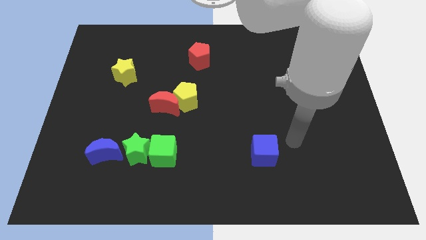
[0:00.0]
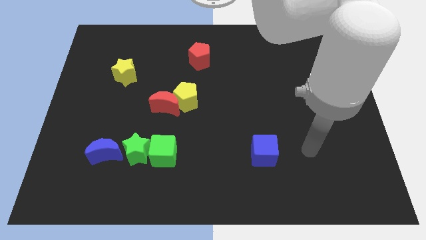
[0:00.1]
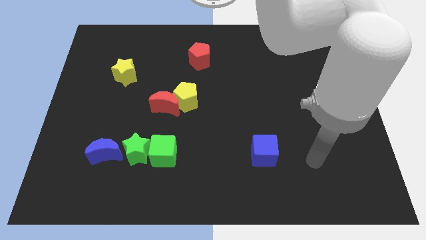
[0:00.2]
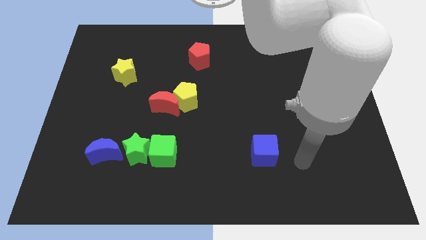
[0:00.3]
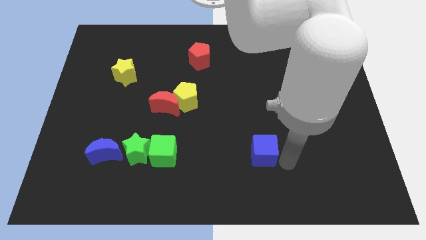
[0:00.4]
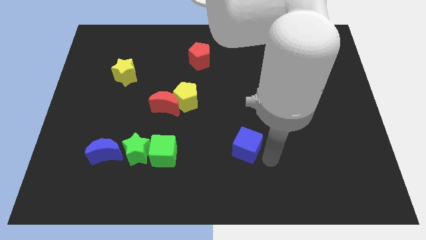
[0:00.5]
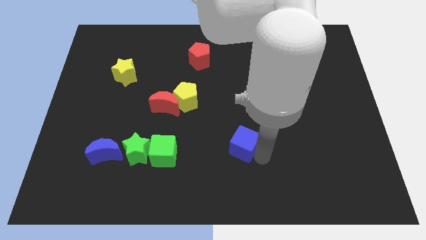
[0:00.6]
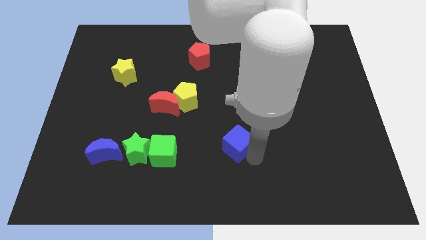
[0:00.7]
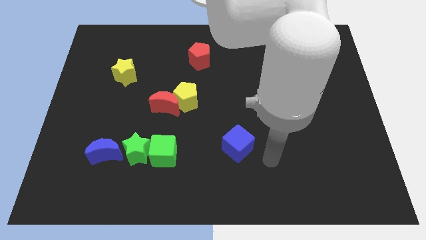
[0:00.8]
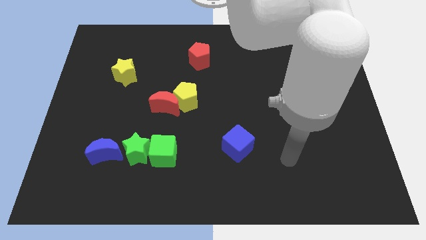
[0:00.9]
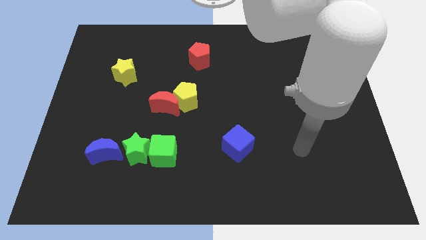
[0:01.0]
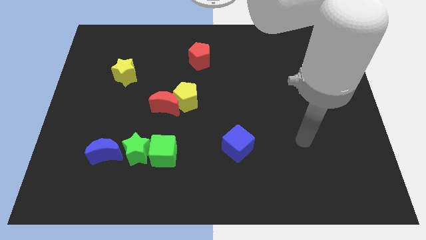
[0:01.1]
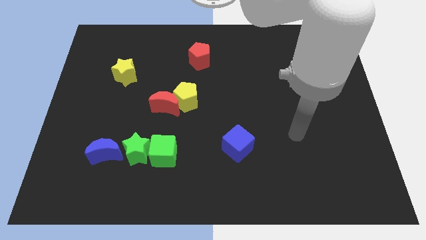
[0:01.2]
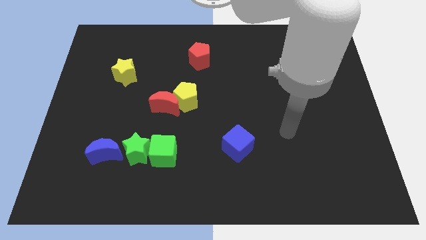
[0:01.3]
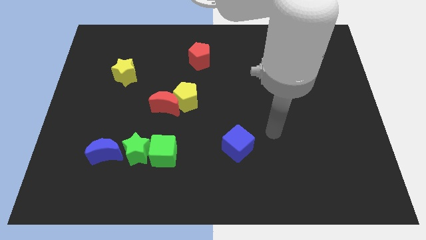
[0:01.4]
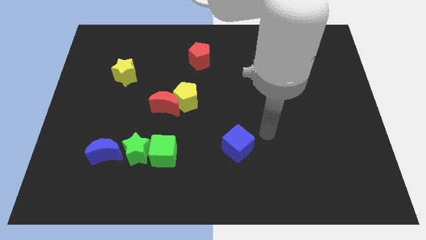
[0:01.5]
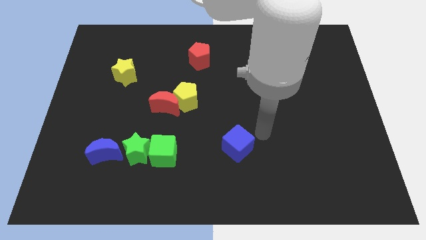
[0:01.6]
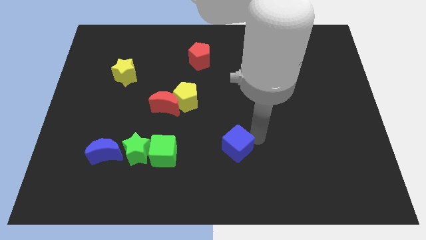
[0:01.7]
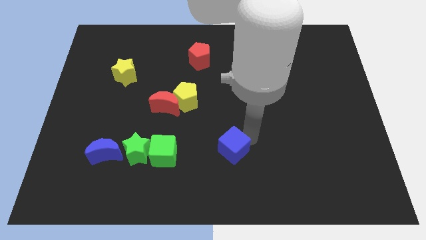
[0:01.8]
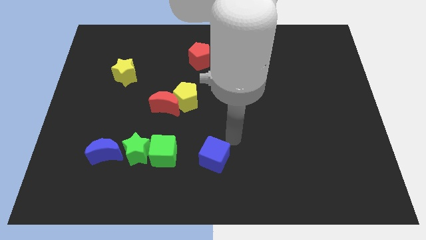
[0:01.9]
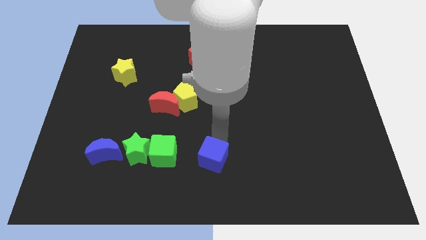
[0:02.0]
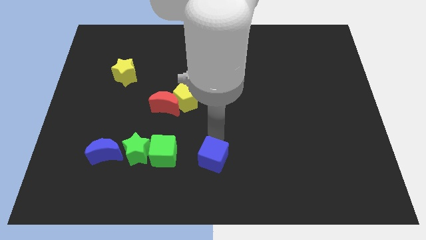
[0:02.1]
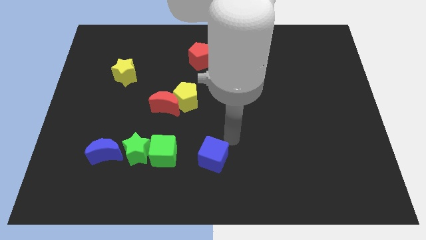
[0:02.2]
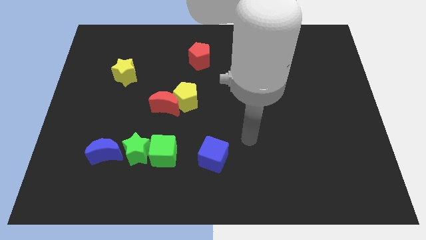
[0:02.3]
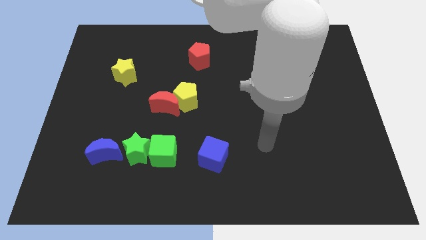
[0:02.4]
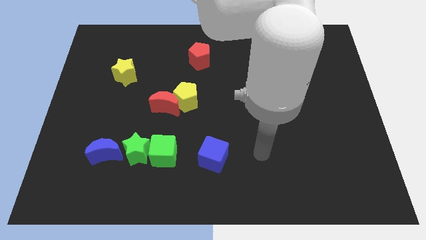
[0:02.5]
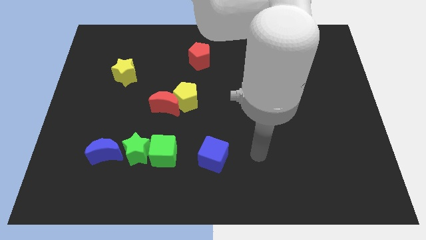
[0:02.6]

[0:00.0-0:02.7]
place the blue cube parallel to the green cube

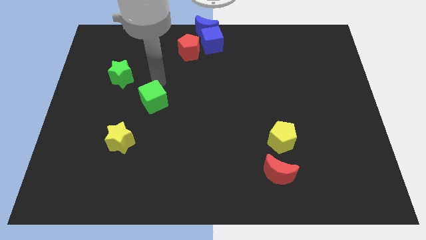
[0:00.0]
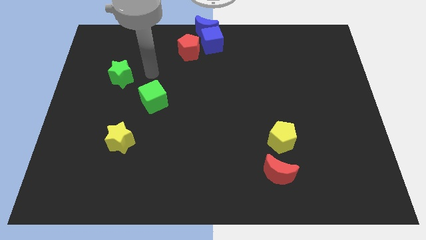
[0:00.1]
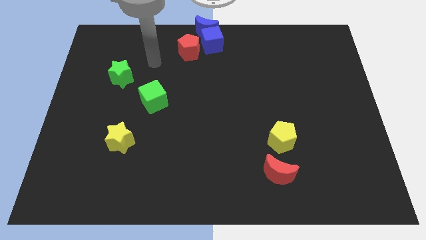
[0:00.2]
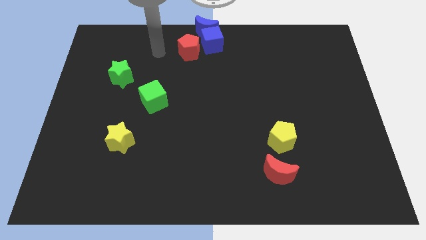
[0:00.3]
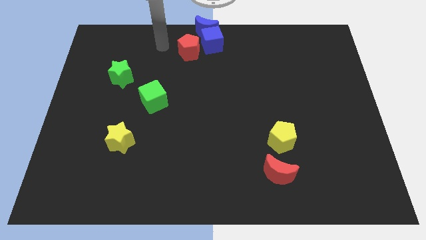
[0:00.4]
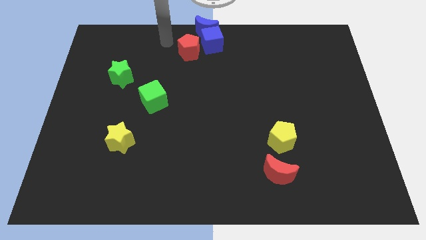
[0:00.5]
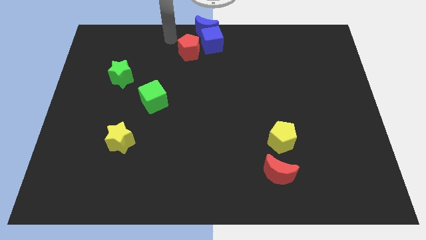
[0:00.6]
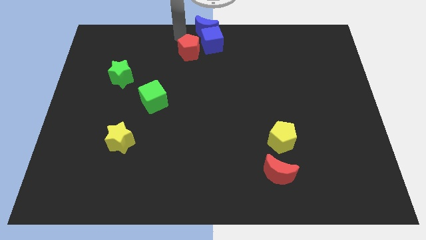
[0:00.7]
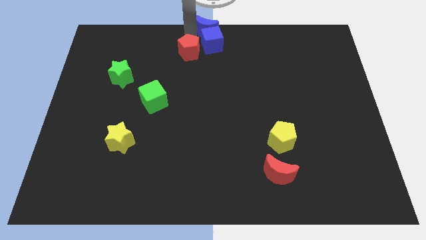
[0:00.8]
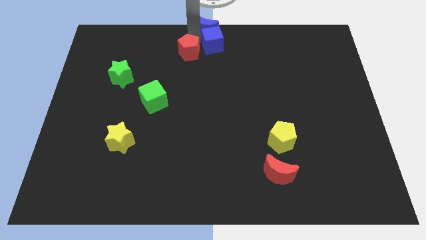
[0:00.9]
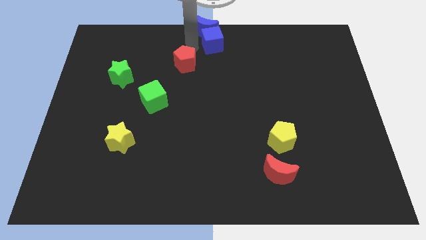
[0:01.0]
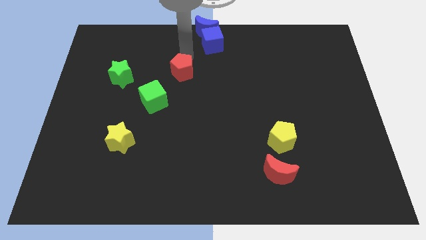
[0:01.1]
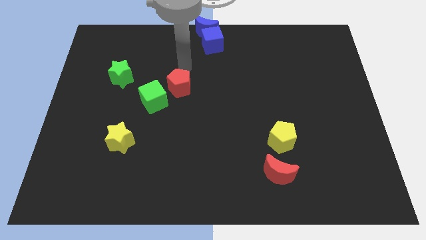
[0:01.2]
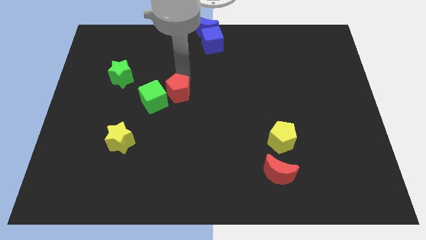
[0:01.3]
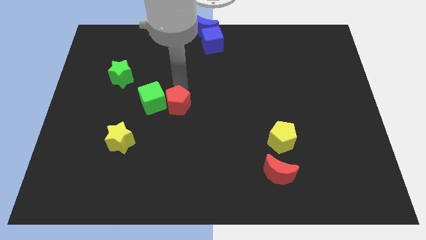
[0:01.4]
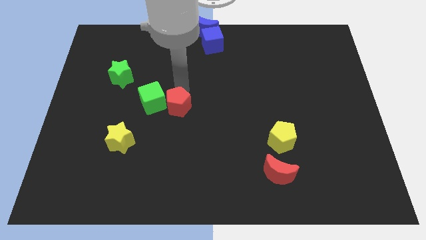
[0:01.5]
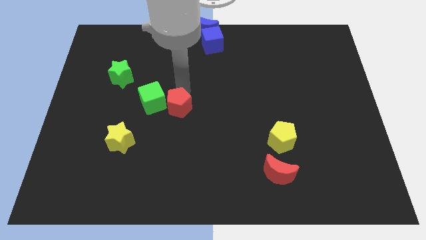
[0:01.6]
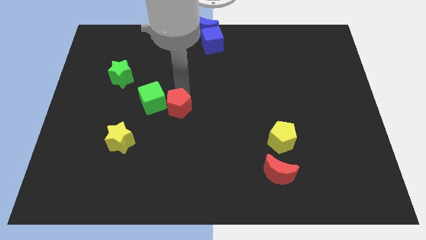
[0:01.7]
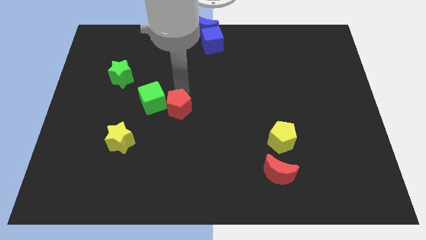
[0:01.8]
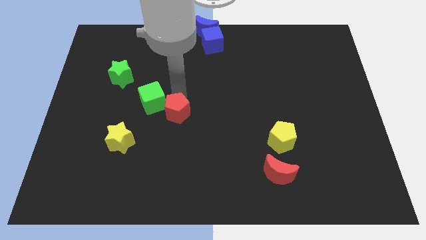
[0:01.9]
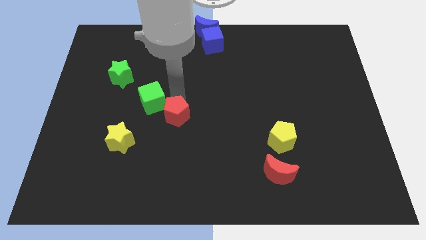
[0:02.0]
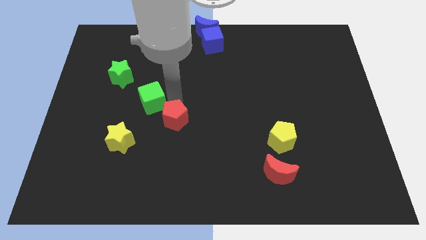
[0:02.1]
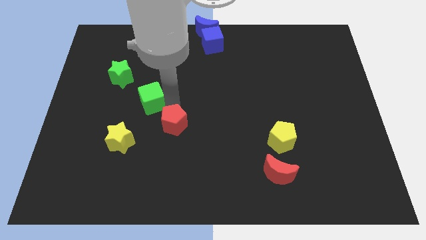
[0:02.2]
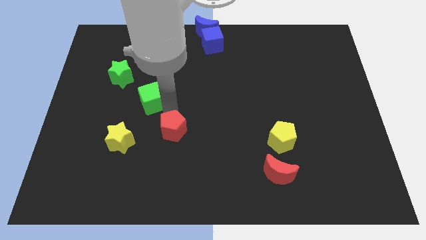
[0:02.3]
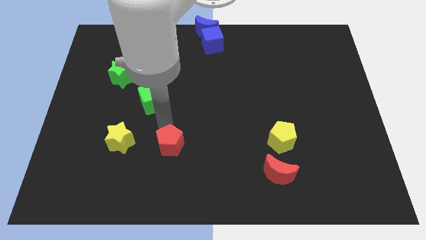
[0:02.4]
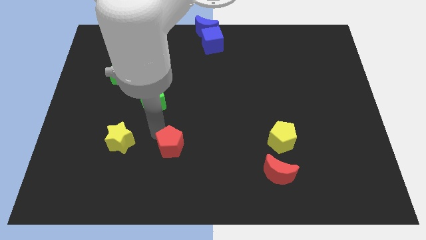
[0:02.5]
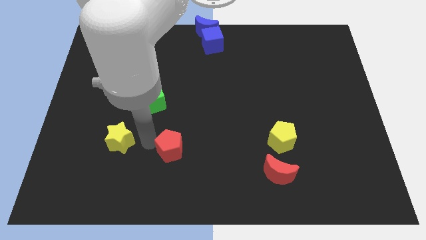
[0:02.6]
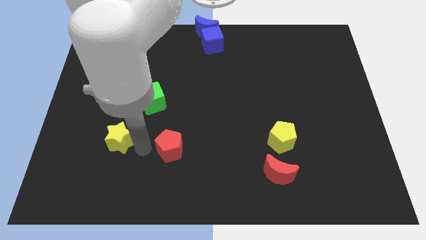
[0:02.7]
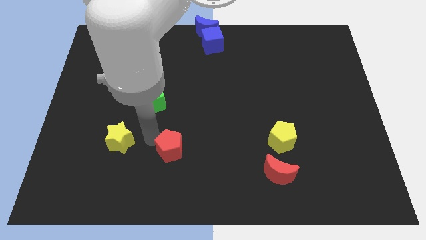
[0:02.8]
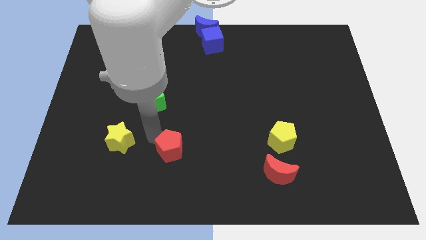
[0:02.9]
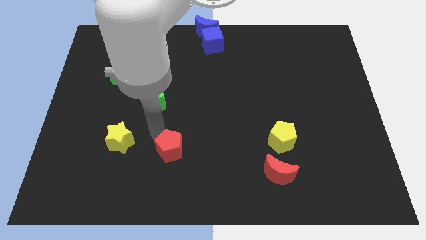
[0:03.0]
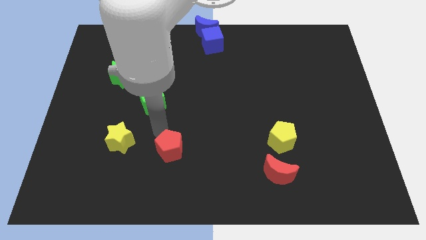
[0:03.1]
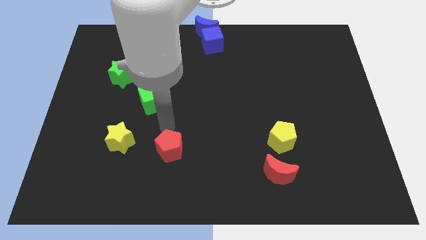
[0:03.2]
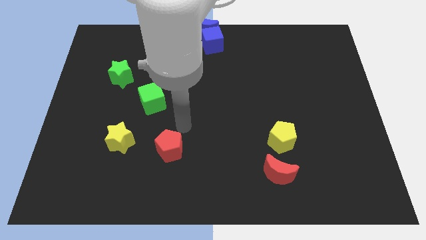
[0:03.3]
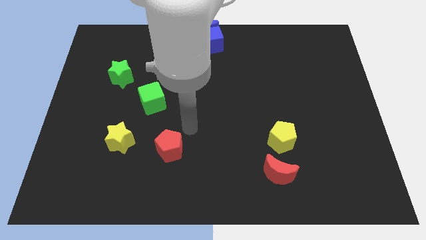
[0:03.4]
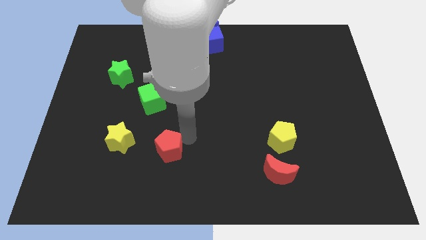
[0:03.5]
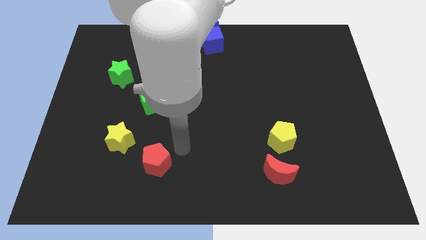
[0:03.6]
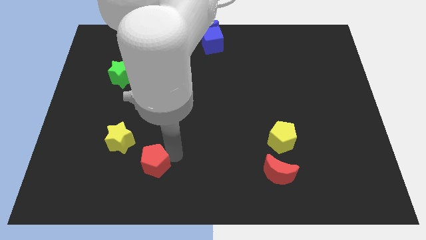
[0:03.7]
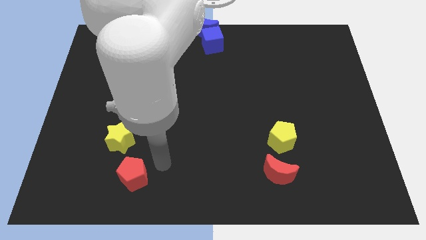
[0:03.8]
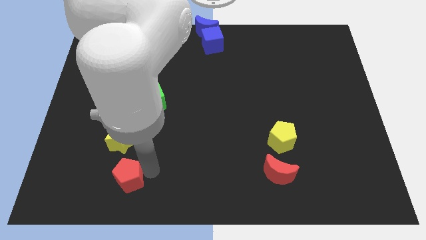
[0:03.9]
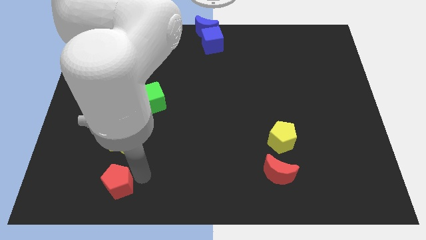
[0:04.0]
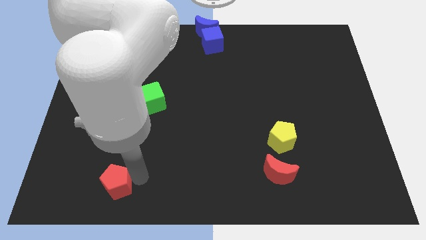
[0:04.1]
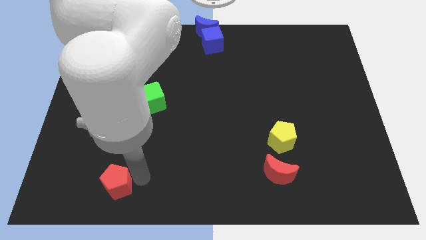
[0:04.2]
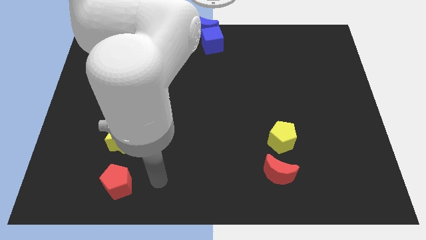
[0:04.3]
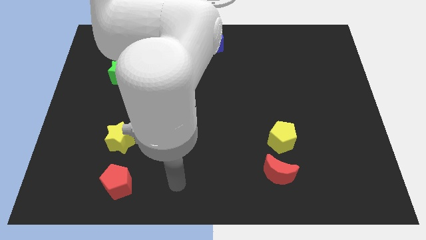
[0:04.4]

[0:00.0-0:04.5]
place the red pentagon down to the yellow star

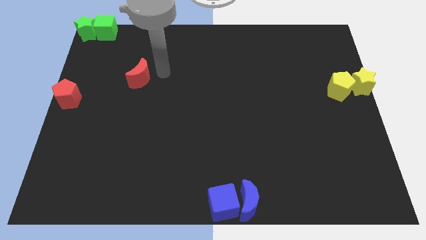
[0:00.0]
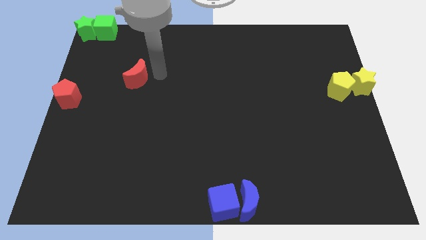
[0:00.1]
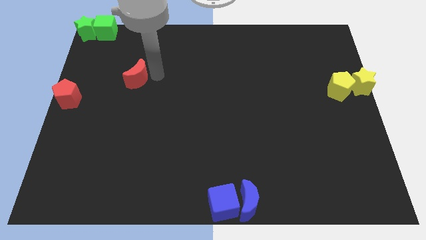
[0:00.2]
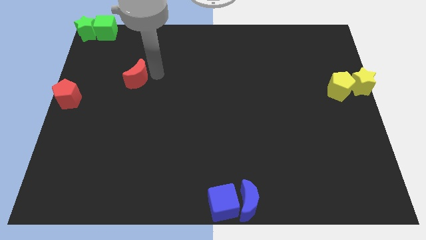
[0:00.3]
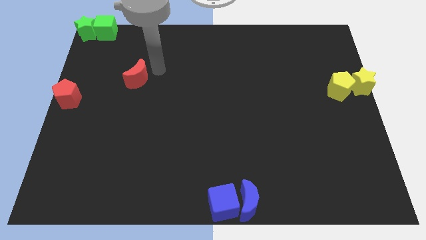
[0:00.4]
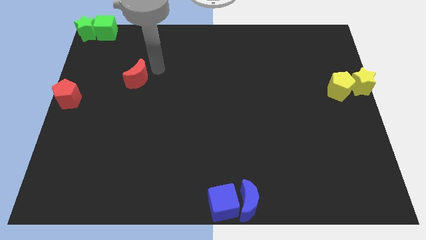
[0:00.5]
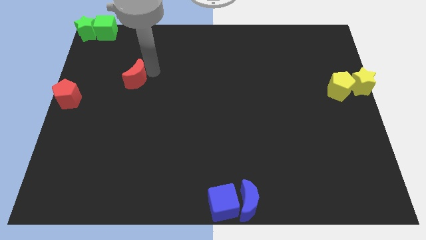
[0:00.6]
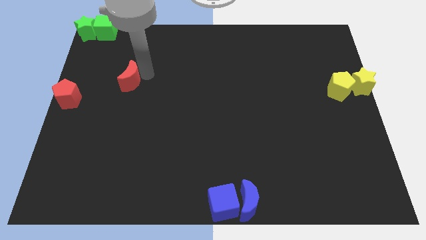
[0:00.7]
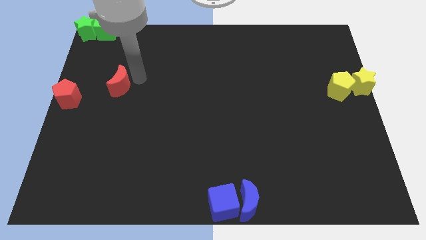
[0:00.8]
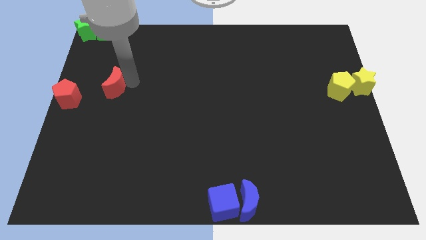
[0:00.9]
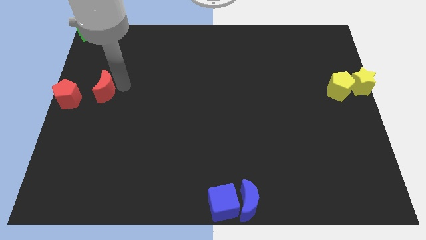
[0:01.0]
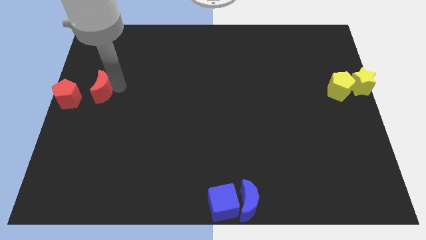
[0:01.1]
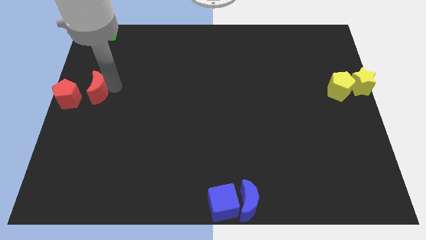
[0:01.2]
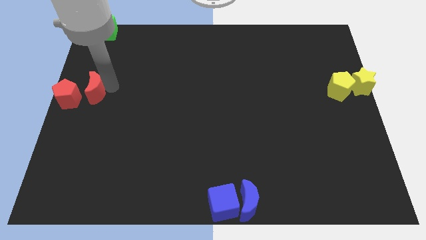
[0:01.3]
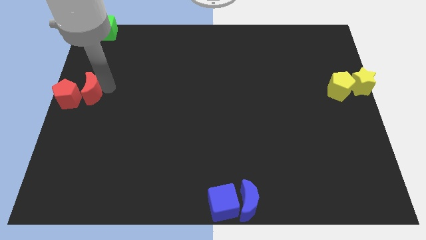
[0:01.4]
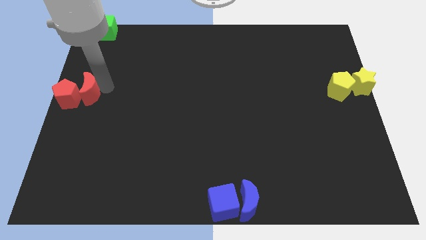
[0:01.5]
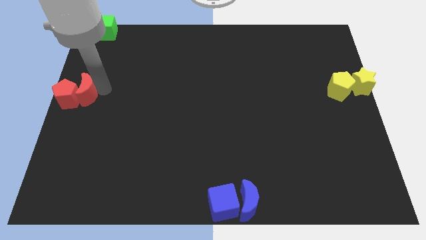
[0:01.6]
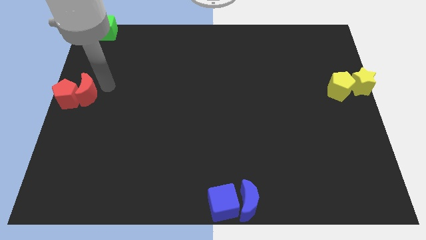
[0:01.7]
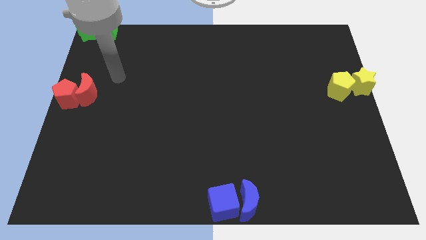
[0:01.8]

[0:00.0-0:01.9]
move the red crescent close to the red pentagon
